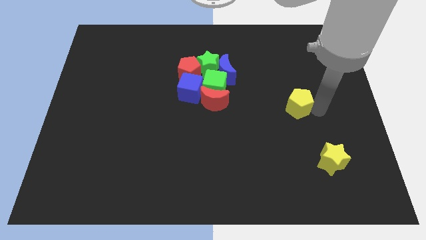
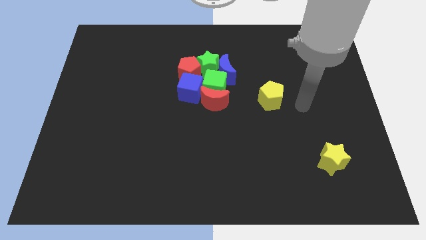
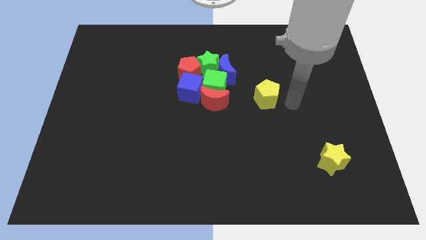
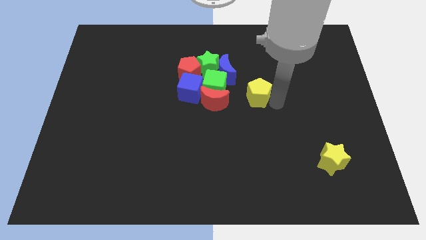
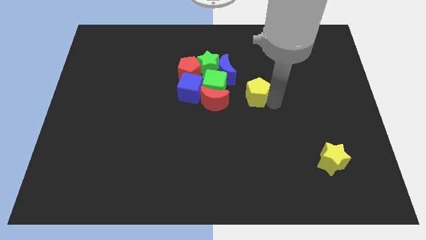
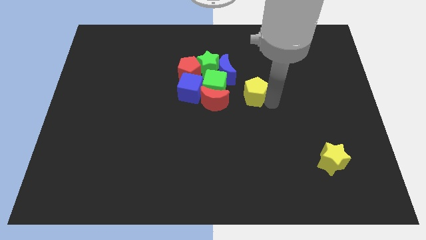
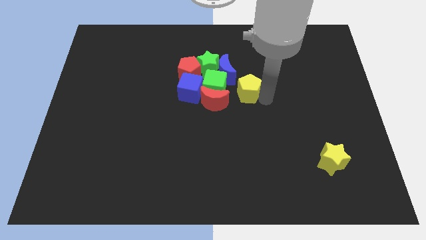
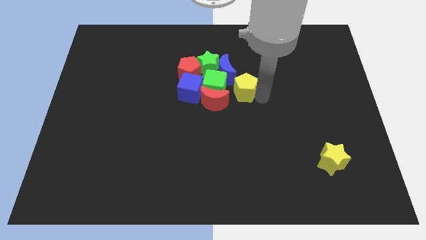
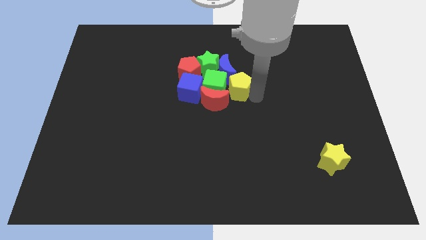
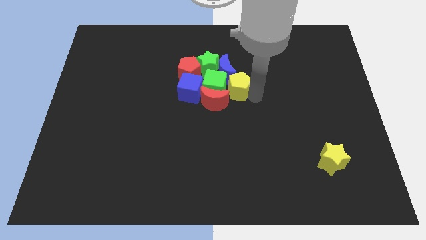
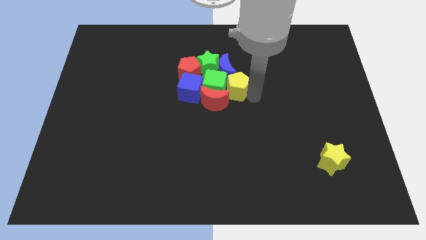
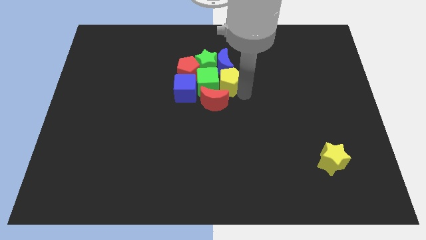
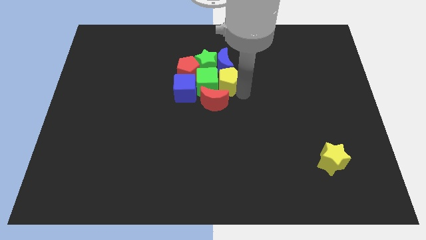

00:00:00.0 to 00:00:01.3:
move the yellow pentagon into the right side of the green cube

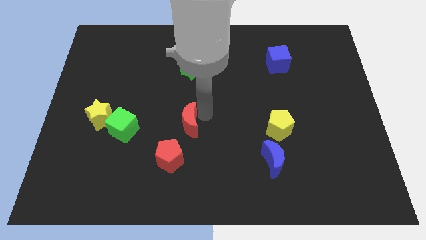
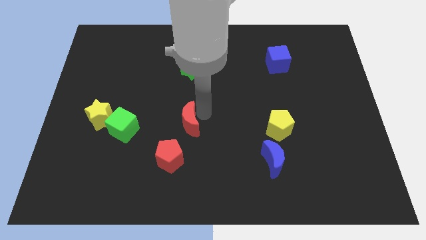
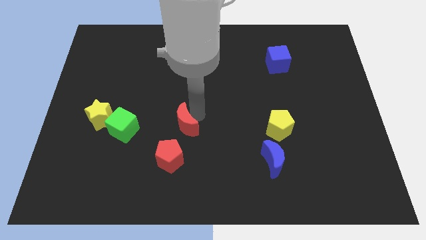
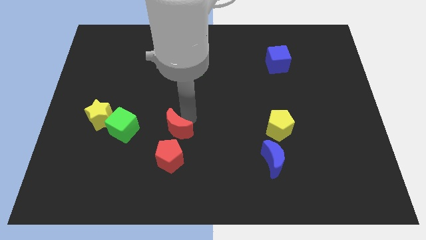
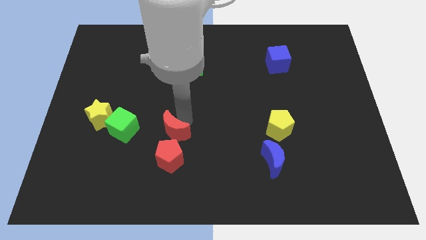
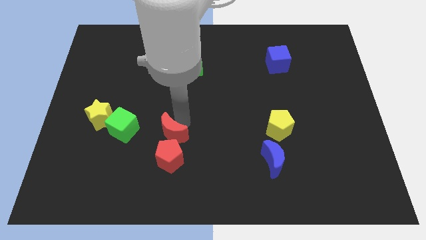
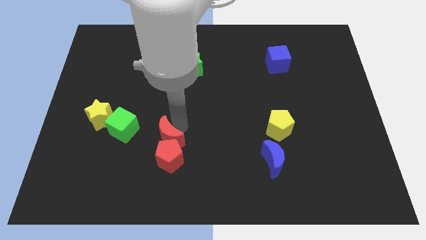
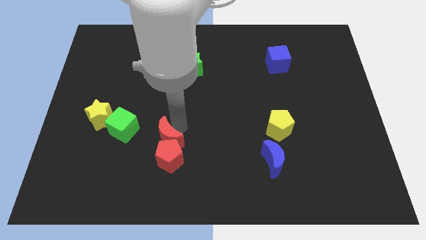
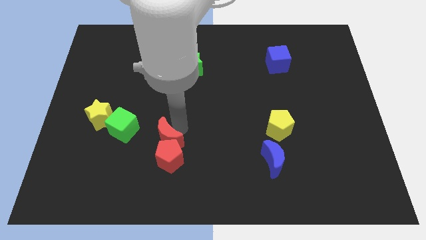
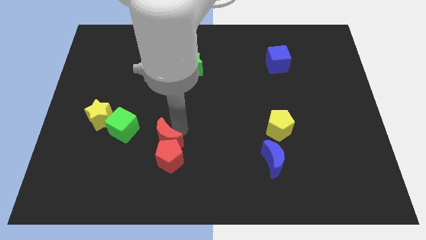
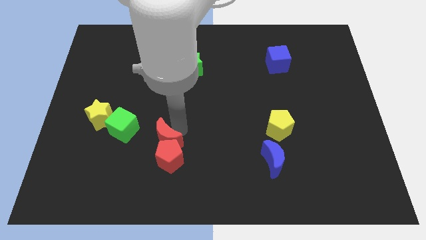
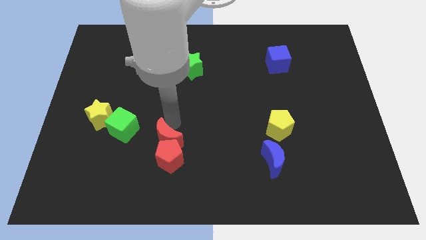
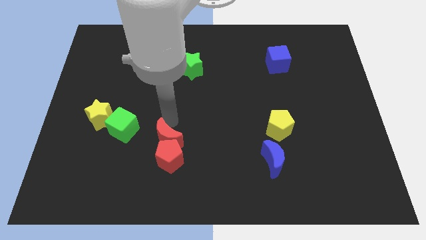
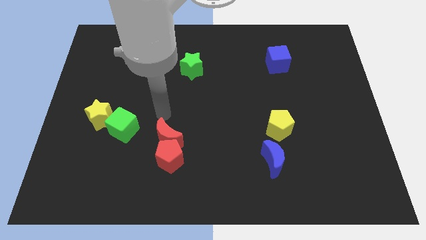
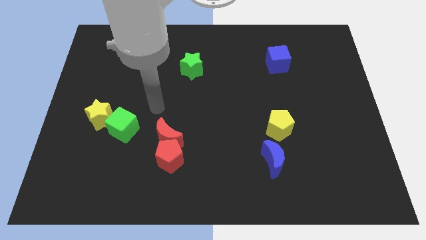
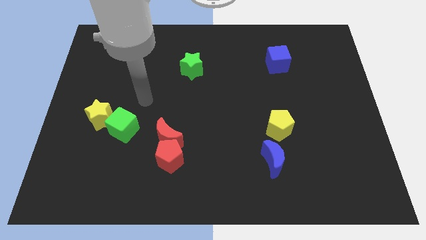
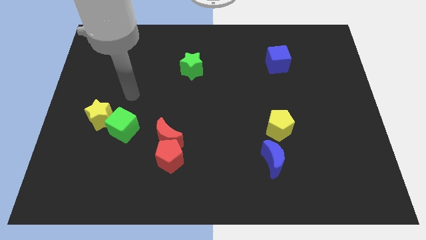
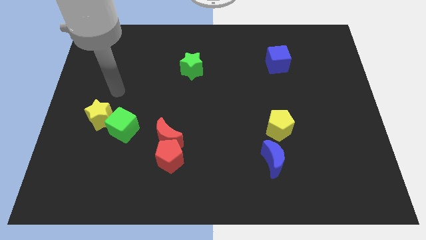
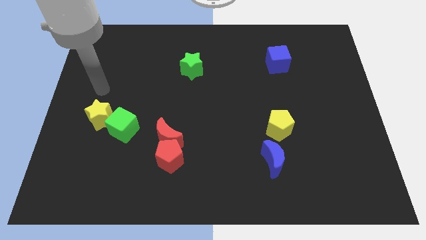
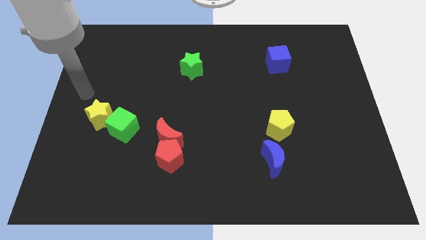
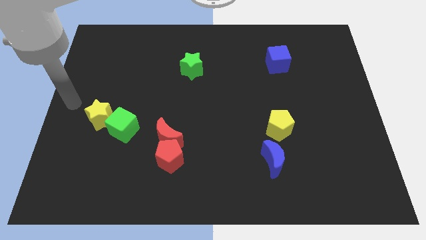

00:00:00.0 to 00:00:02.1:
move your arm away from the red moon

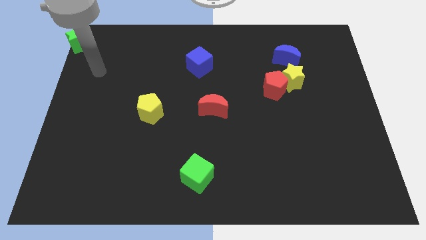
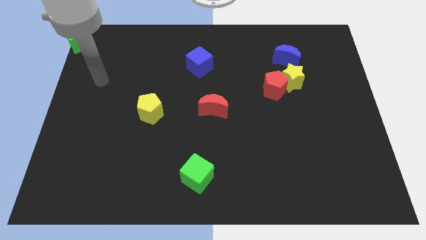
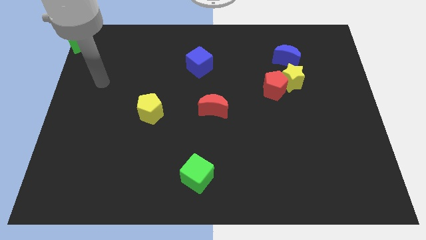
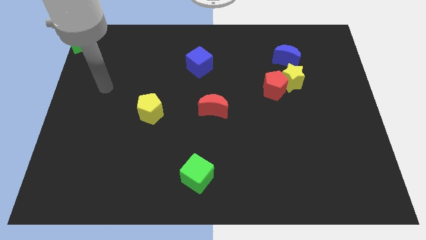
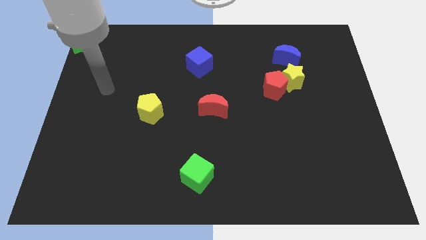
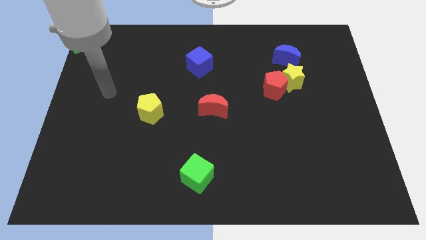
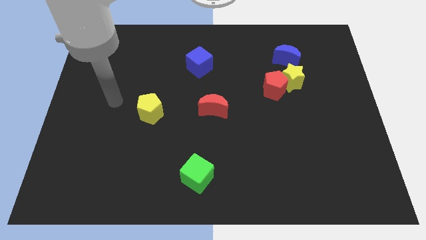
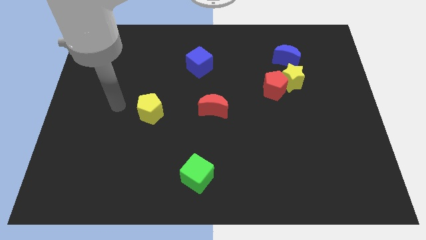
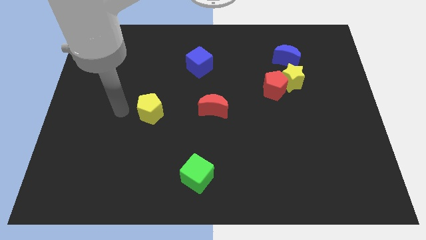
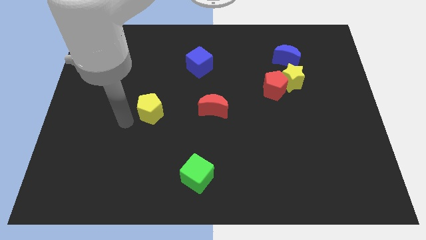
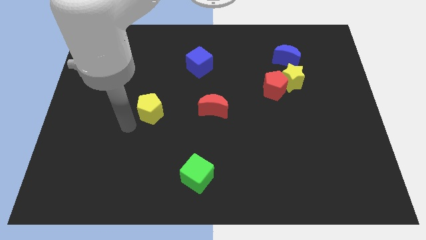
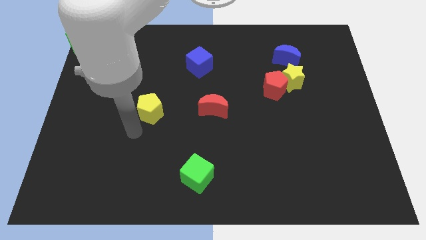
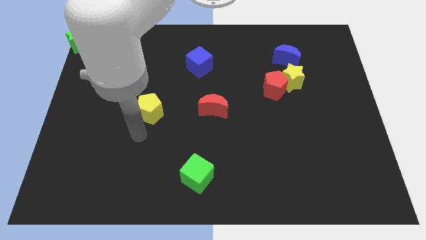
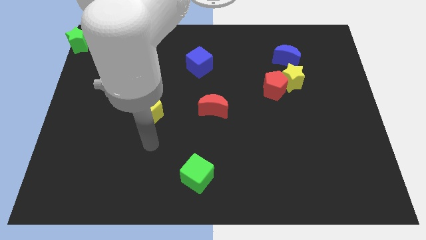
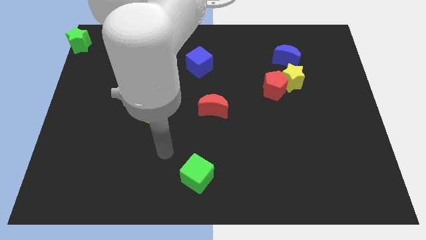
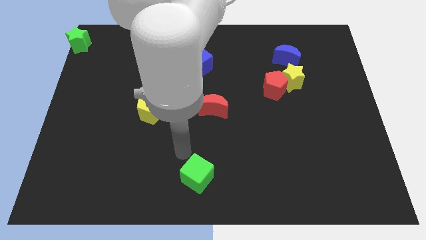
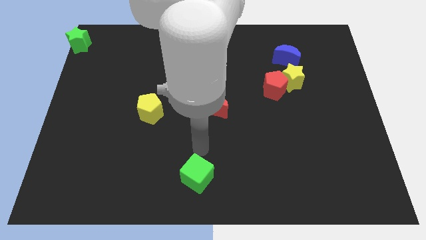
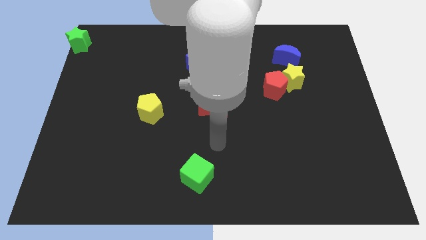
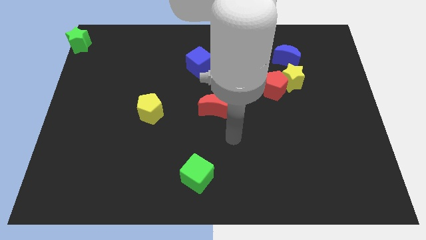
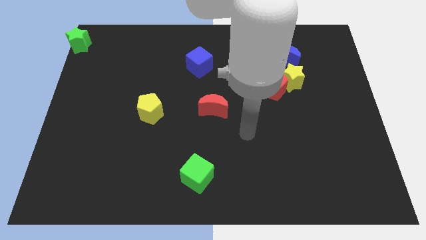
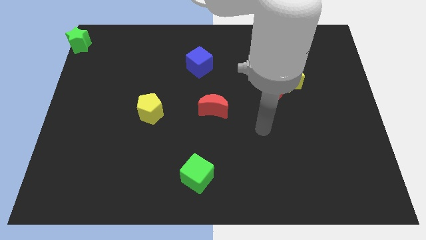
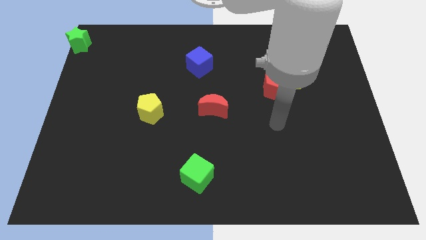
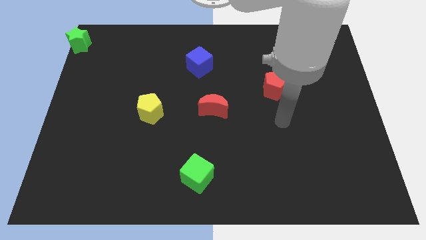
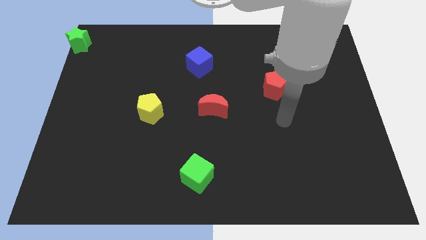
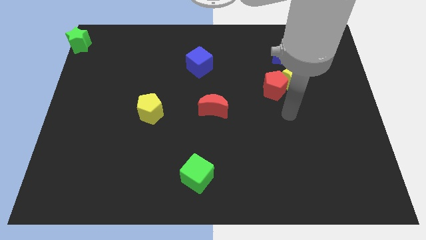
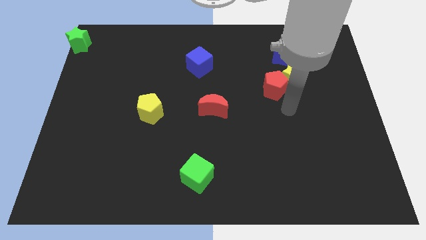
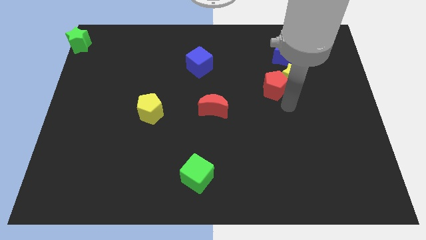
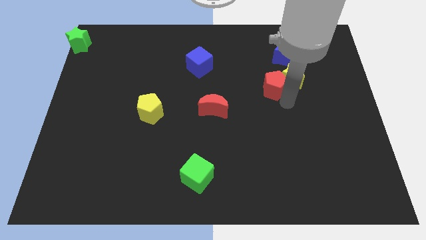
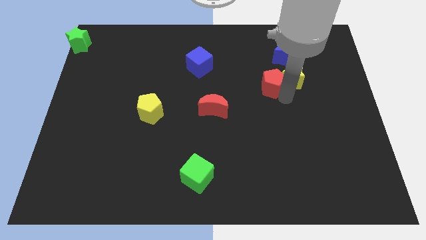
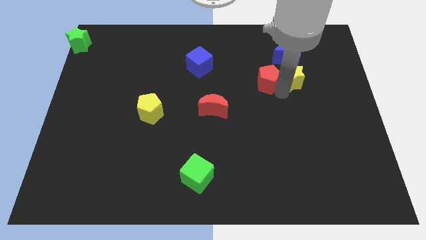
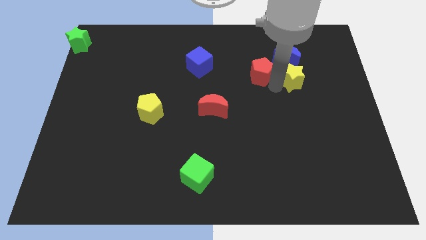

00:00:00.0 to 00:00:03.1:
move the arm behind the red pentagon

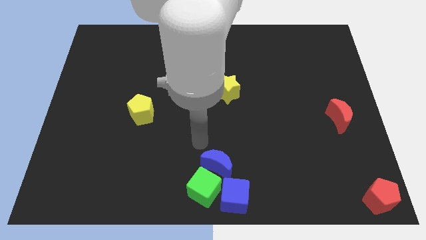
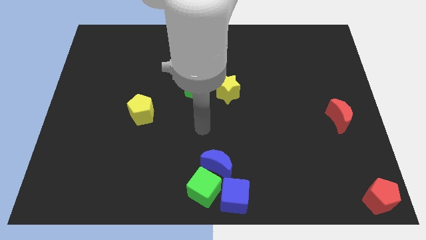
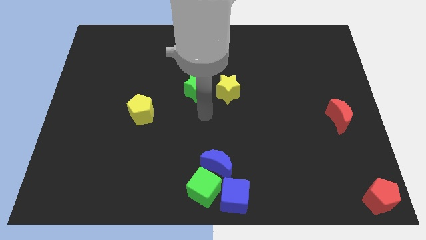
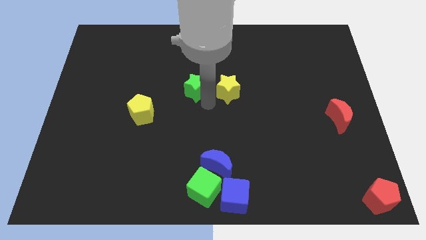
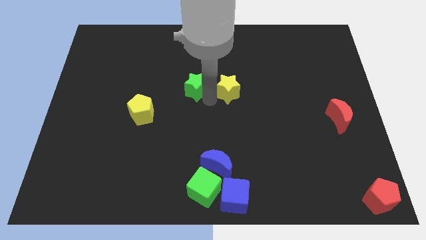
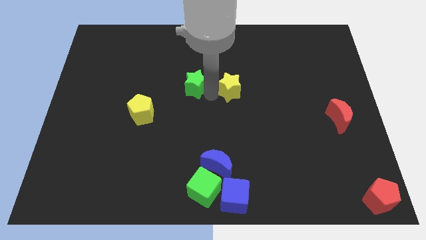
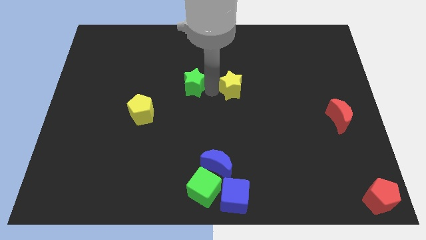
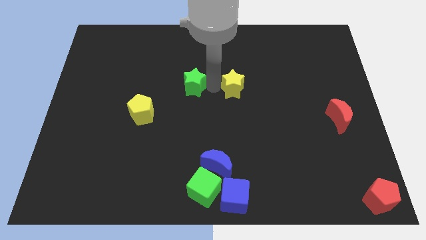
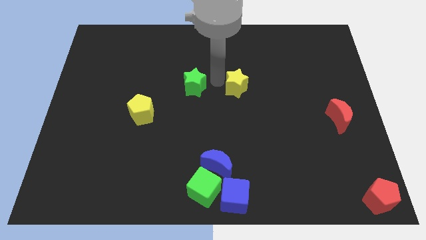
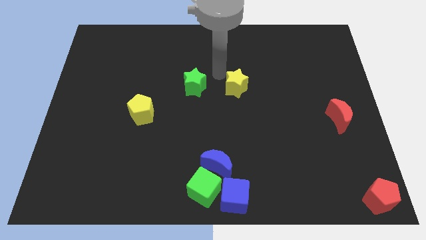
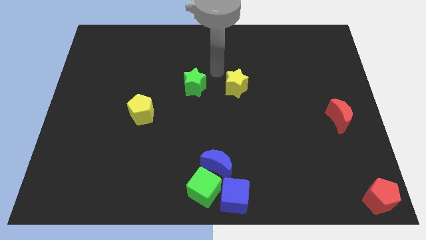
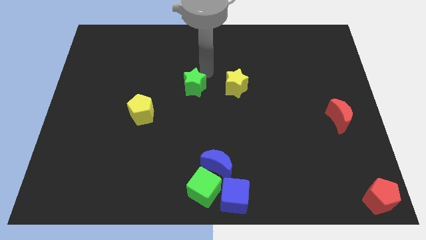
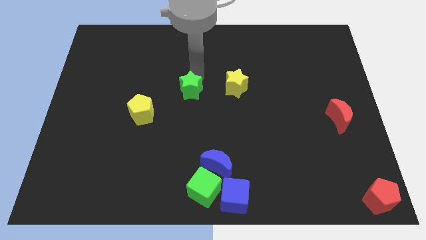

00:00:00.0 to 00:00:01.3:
slightly push the green star away from the yellow star

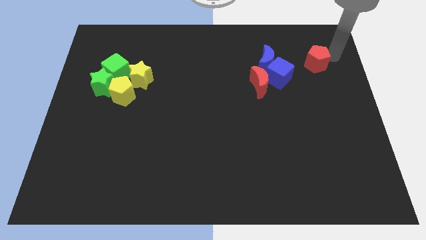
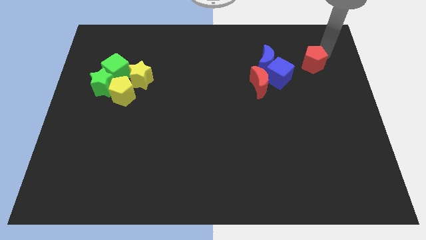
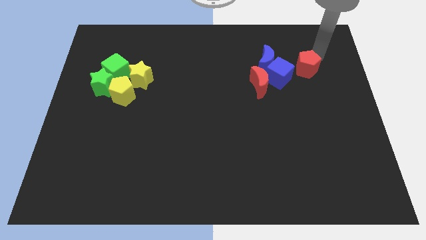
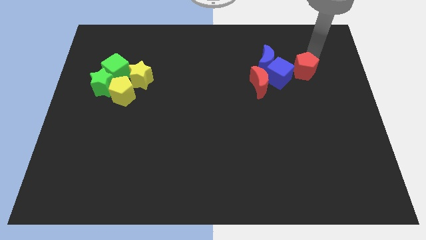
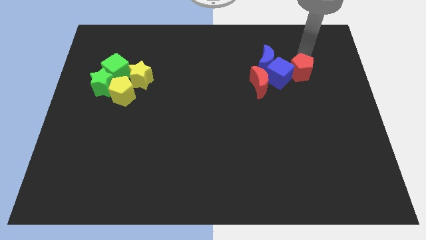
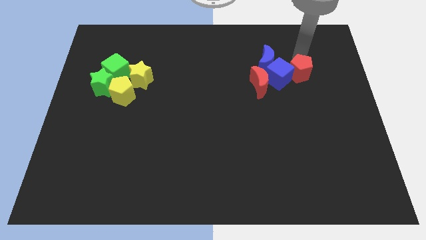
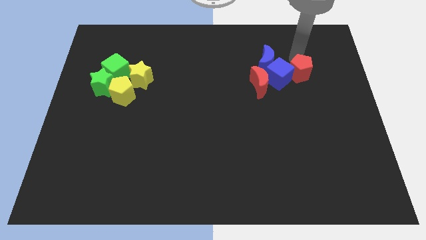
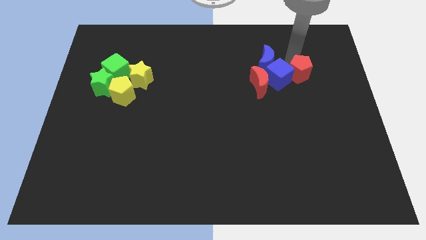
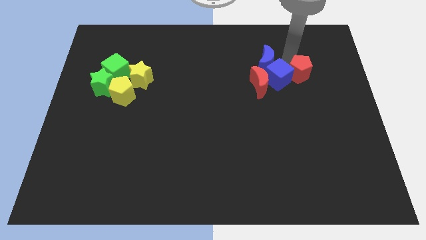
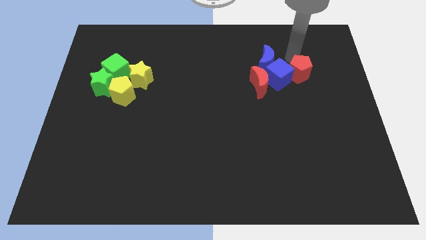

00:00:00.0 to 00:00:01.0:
move red pentagon into the blue cube
